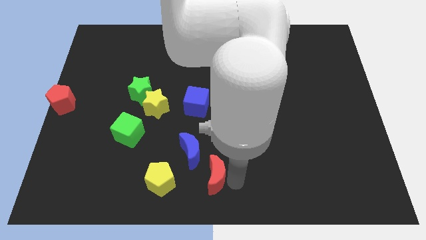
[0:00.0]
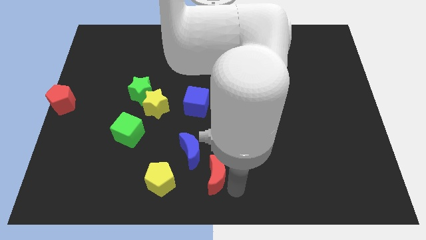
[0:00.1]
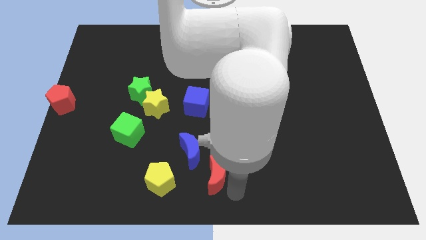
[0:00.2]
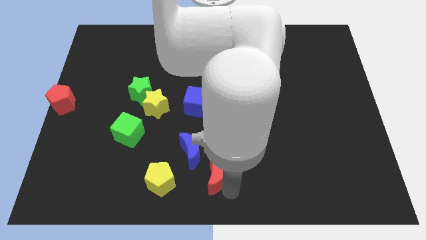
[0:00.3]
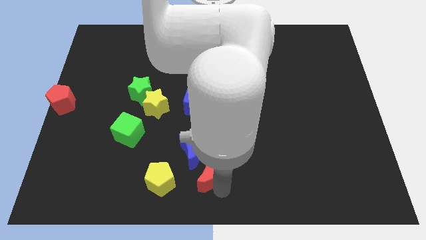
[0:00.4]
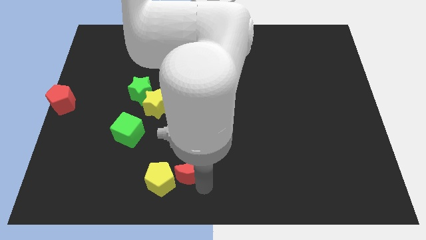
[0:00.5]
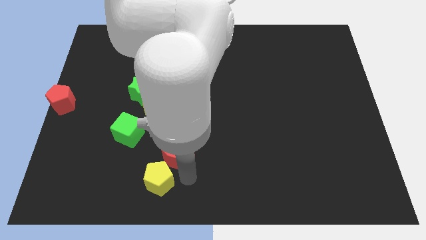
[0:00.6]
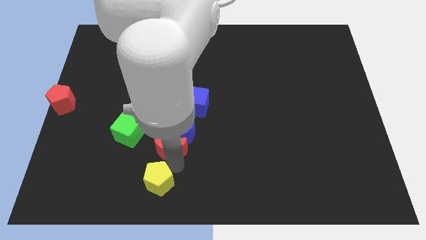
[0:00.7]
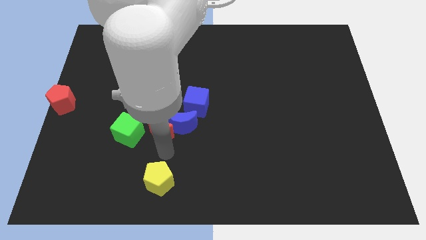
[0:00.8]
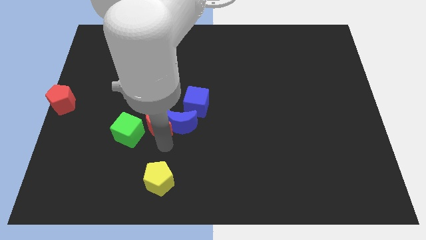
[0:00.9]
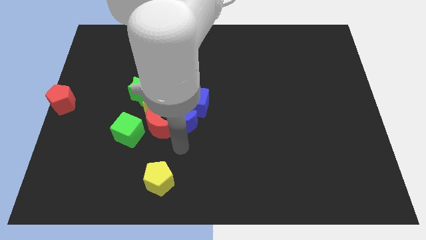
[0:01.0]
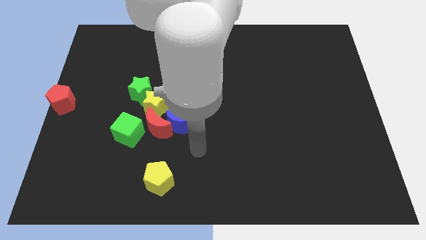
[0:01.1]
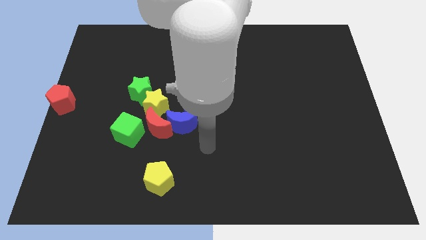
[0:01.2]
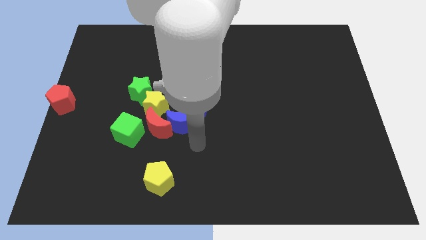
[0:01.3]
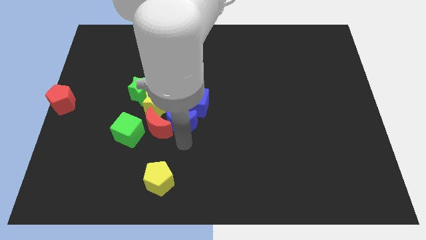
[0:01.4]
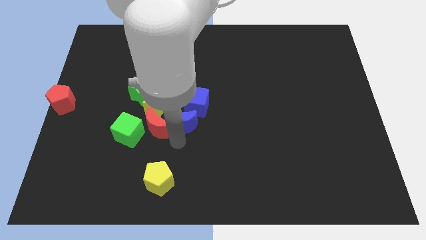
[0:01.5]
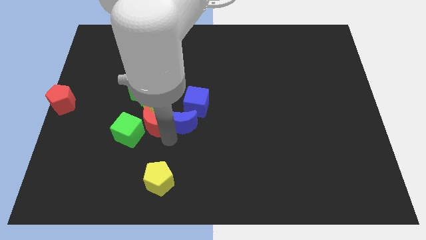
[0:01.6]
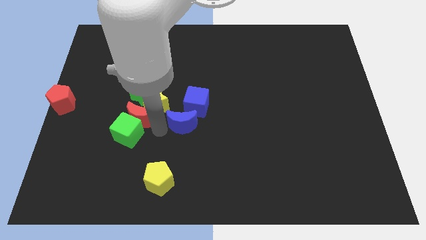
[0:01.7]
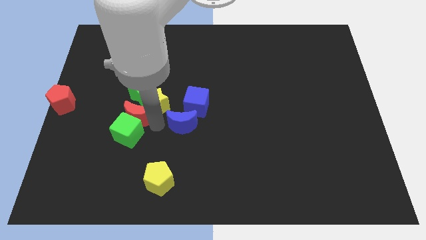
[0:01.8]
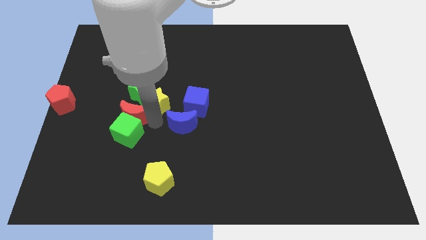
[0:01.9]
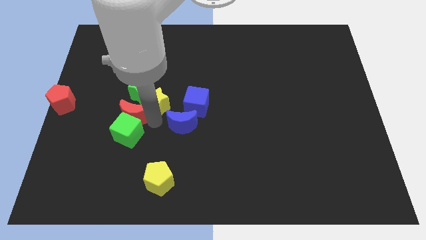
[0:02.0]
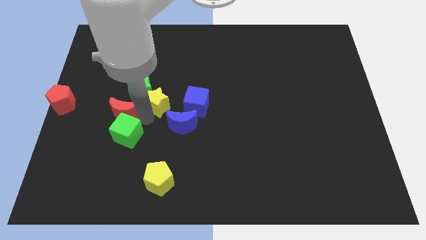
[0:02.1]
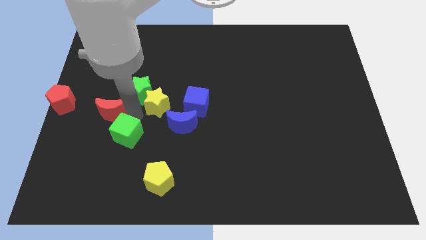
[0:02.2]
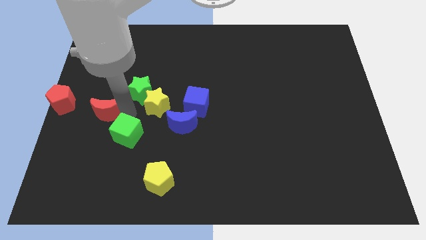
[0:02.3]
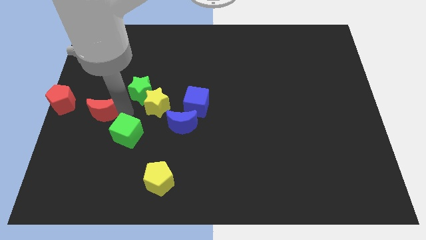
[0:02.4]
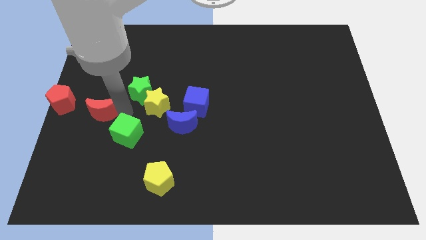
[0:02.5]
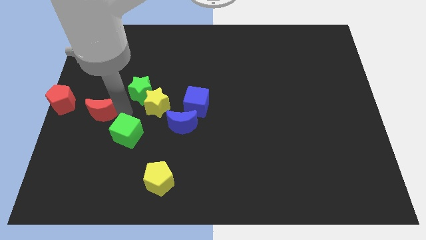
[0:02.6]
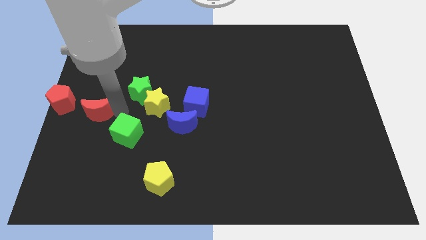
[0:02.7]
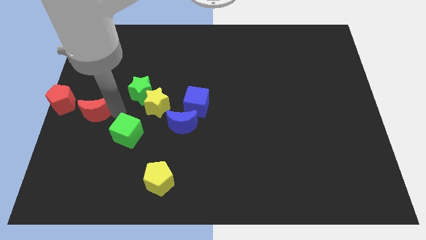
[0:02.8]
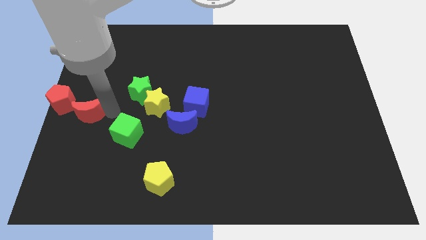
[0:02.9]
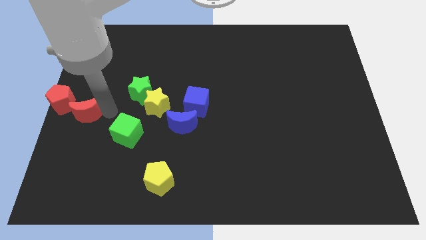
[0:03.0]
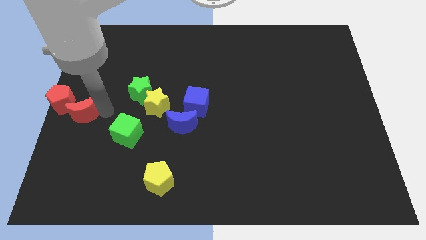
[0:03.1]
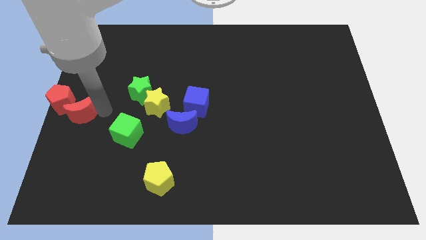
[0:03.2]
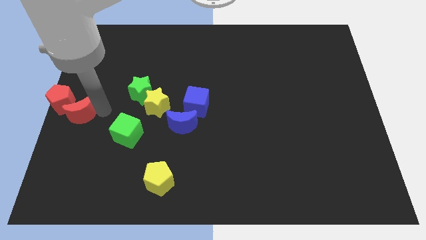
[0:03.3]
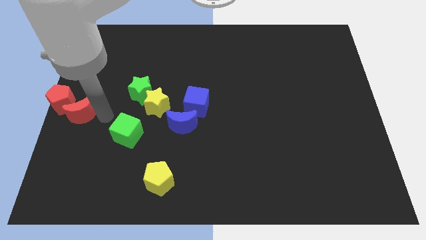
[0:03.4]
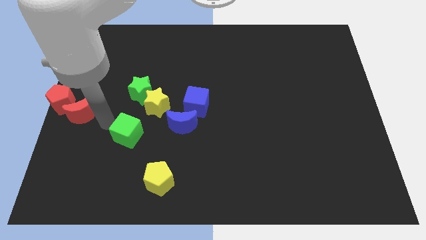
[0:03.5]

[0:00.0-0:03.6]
place the red moon to the bottom right side of the red pentagon

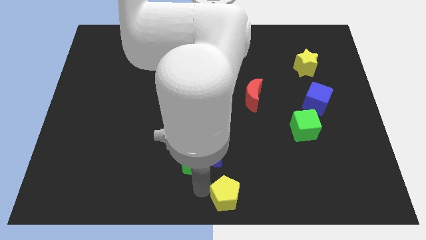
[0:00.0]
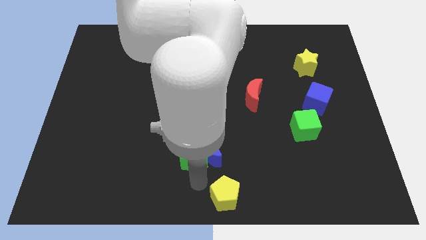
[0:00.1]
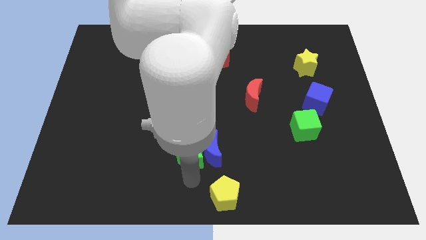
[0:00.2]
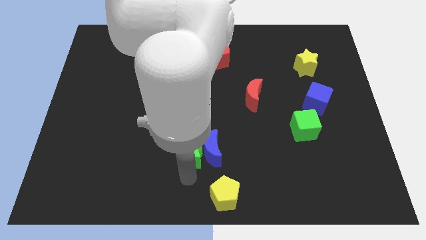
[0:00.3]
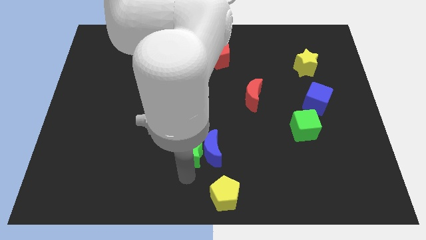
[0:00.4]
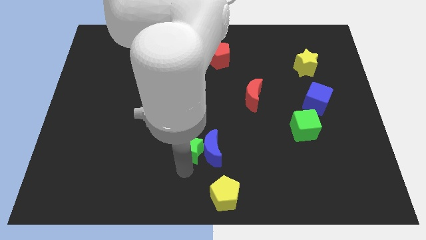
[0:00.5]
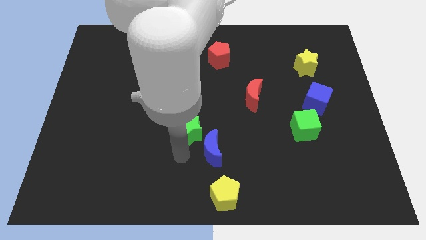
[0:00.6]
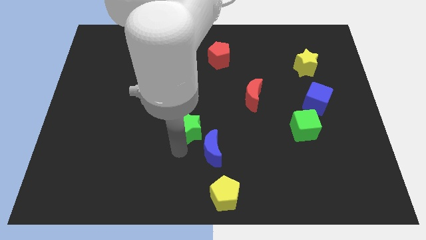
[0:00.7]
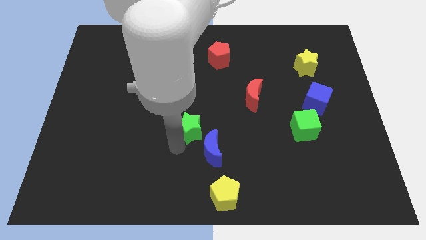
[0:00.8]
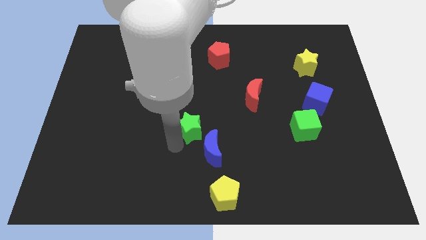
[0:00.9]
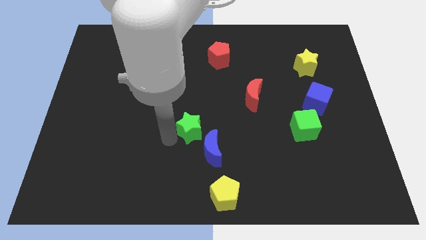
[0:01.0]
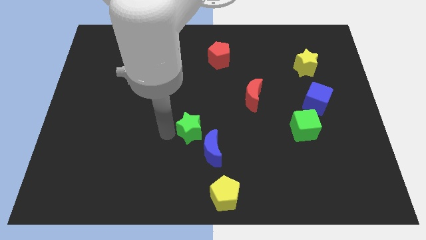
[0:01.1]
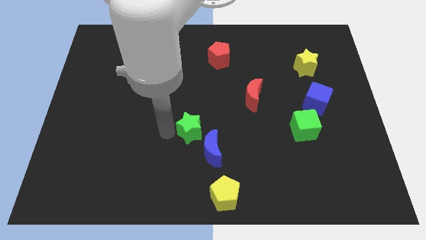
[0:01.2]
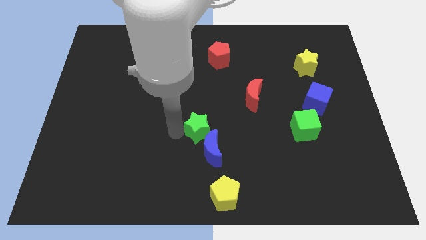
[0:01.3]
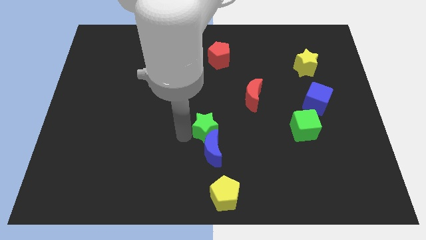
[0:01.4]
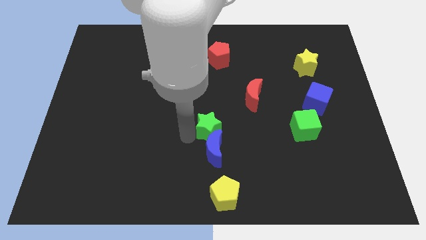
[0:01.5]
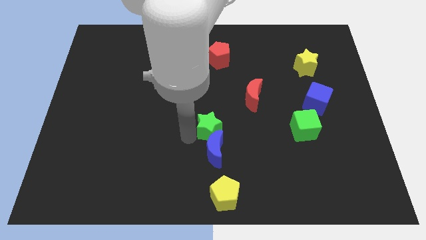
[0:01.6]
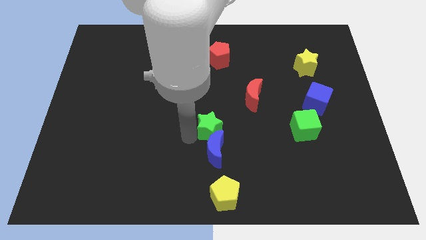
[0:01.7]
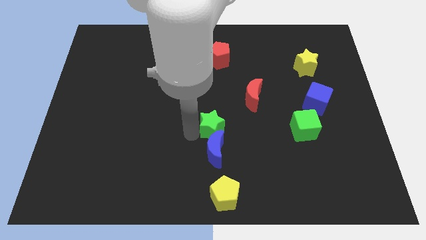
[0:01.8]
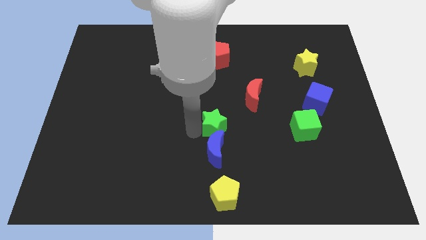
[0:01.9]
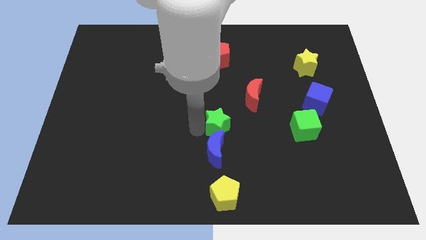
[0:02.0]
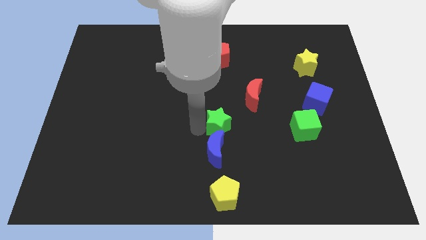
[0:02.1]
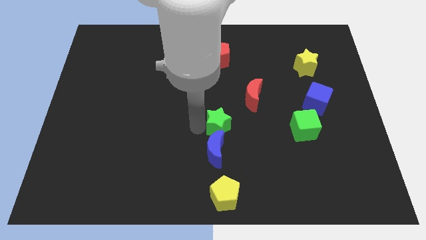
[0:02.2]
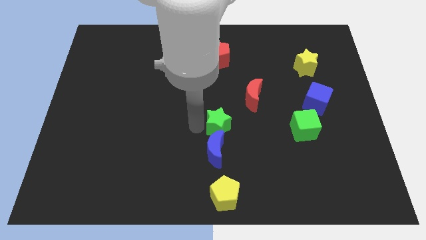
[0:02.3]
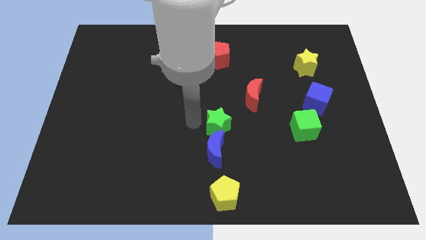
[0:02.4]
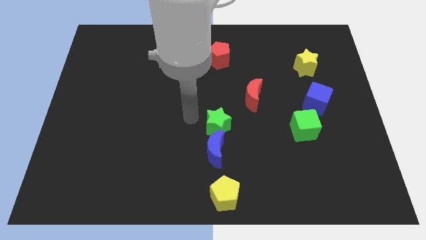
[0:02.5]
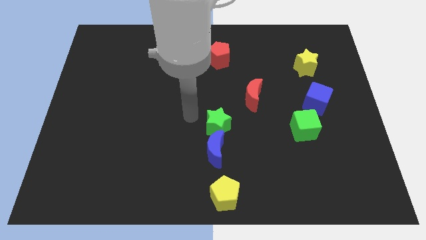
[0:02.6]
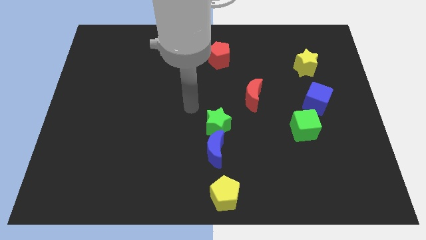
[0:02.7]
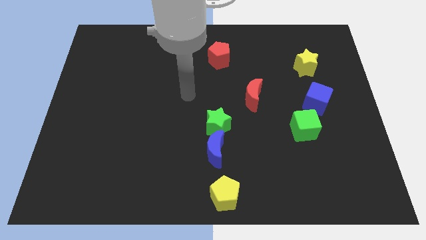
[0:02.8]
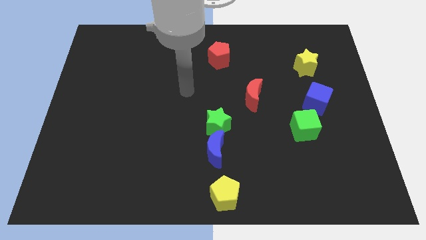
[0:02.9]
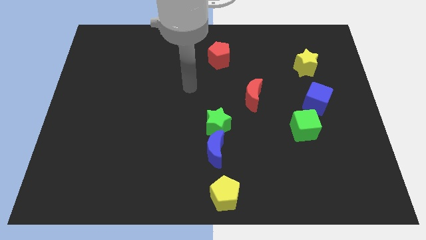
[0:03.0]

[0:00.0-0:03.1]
place the green star above the blue moon

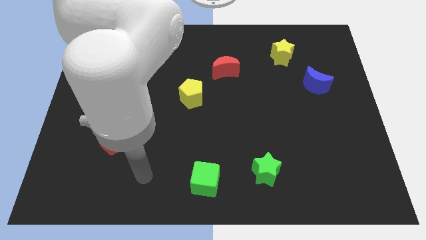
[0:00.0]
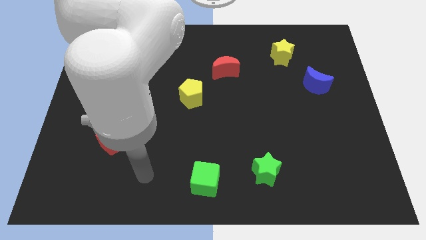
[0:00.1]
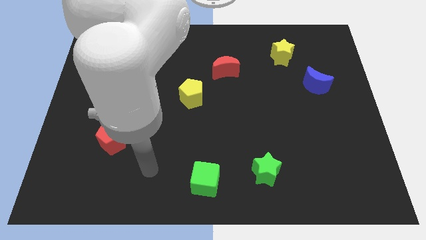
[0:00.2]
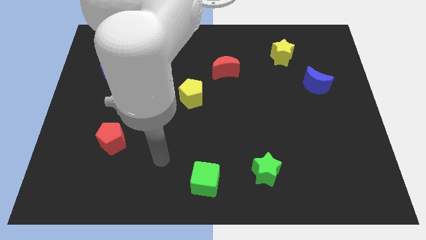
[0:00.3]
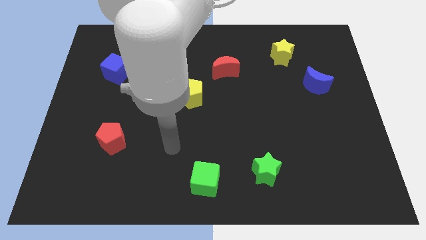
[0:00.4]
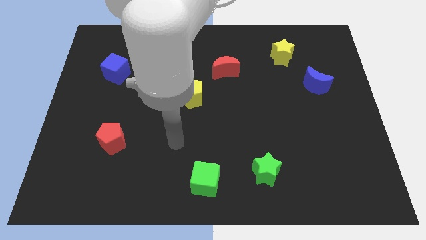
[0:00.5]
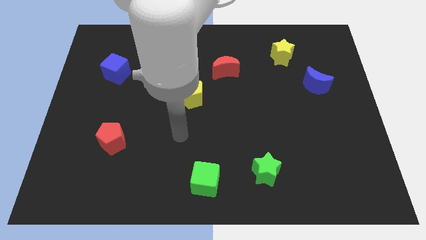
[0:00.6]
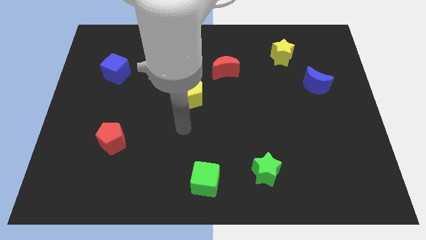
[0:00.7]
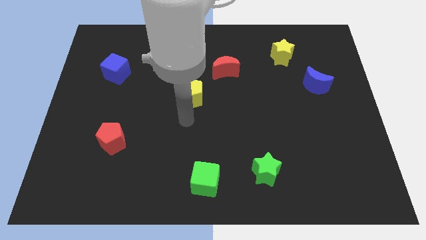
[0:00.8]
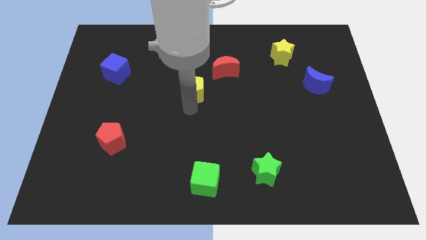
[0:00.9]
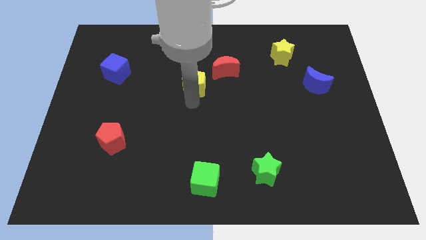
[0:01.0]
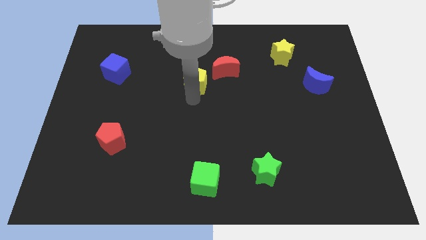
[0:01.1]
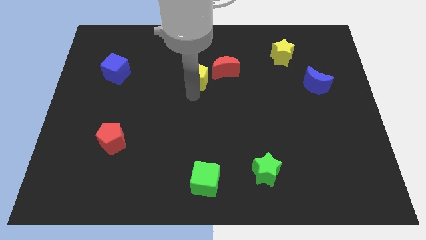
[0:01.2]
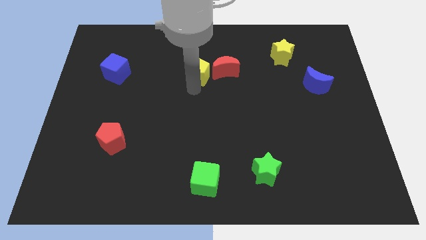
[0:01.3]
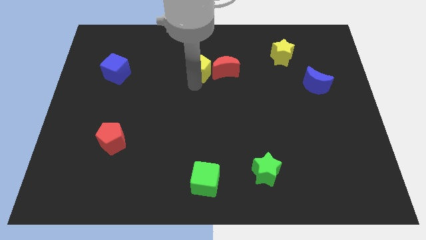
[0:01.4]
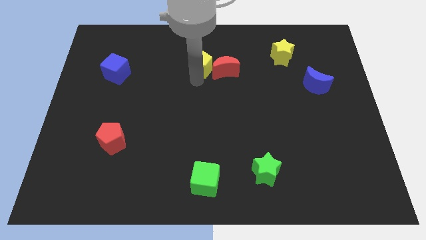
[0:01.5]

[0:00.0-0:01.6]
push the yellow pentagon to the left of the red crescent

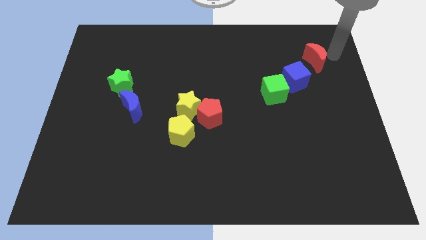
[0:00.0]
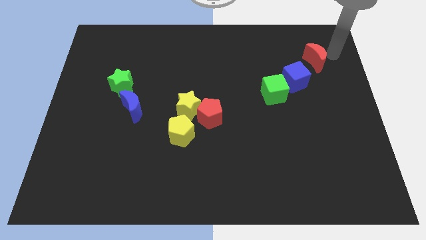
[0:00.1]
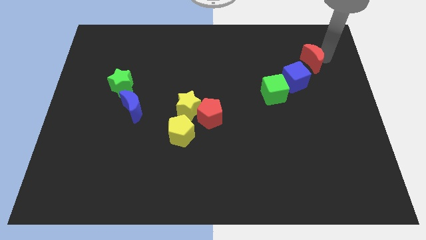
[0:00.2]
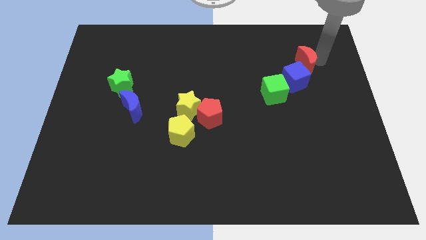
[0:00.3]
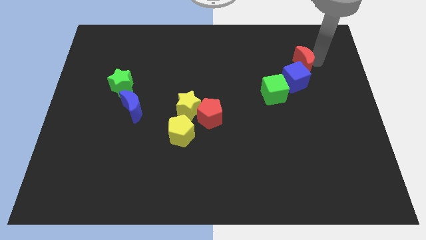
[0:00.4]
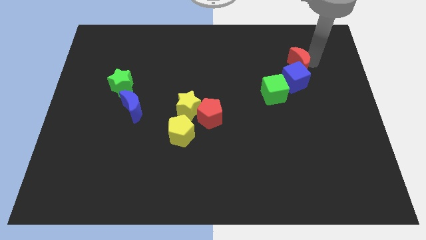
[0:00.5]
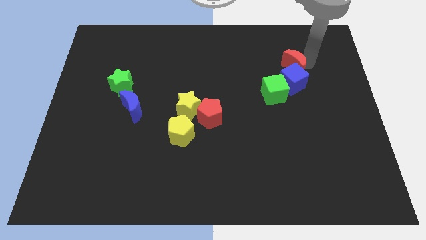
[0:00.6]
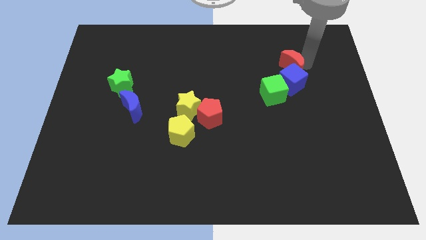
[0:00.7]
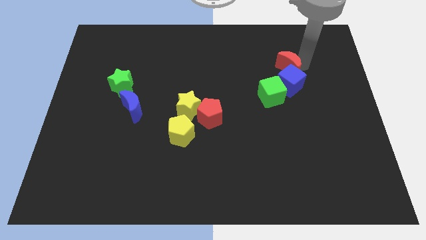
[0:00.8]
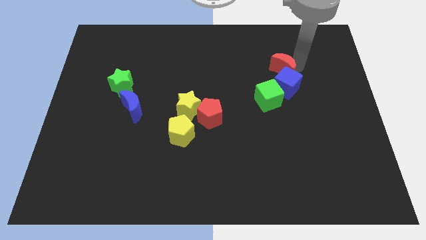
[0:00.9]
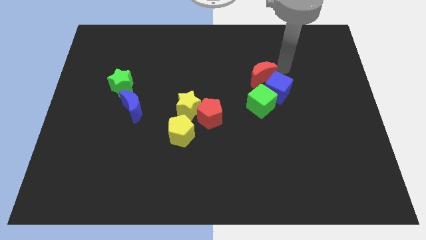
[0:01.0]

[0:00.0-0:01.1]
push the blue cube with the red moon
